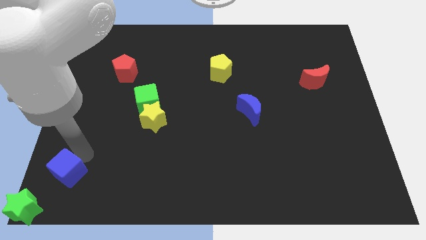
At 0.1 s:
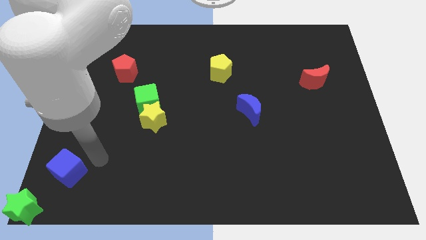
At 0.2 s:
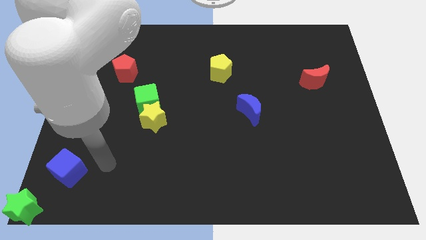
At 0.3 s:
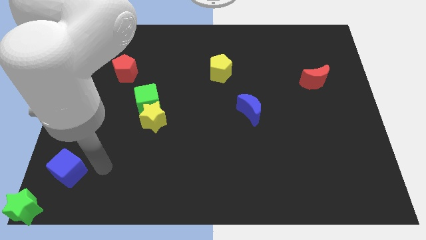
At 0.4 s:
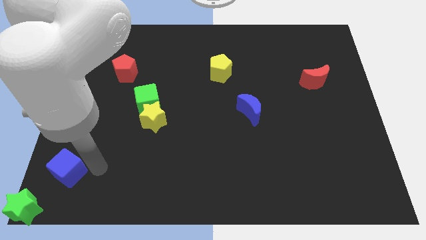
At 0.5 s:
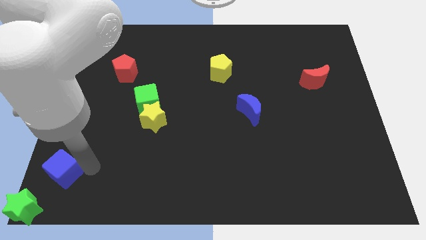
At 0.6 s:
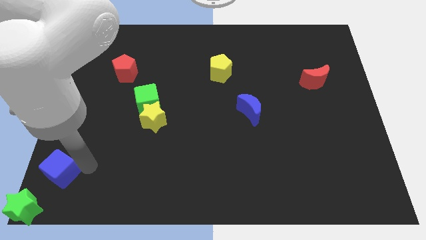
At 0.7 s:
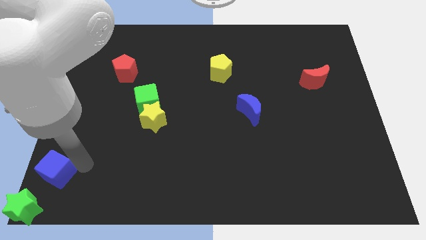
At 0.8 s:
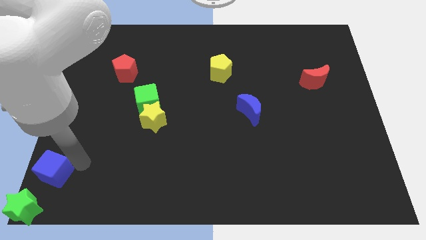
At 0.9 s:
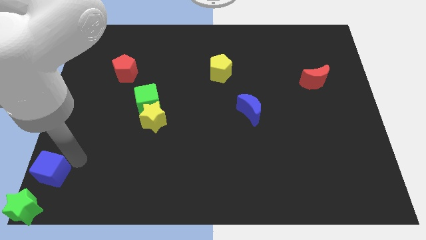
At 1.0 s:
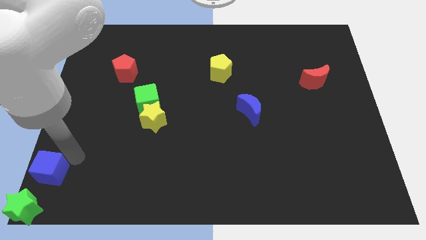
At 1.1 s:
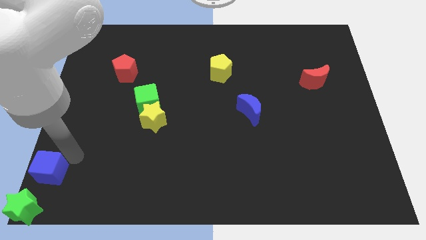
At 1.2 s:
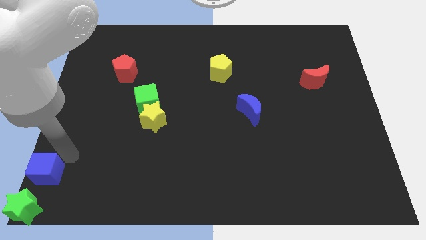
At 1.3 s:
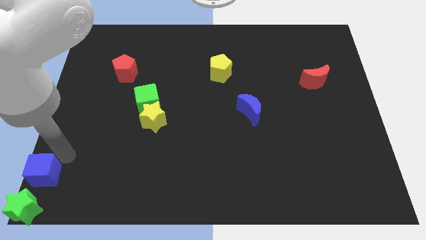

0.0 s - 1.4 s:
place blue cube to the top of green star

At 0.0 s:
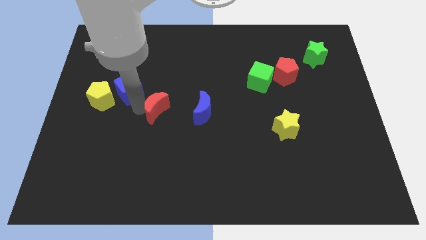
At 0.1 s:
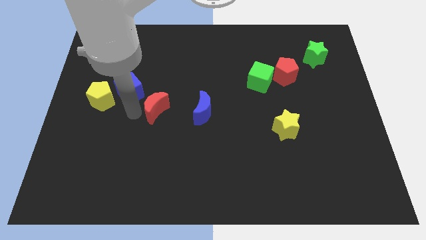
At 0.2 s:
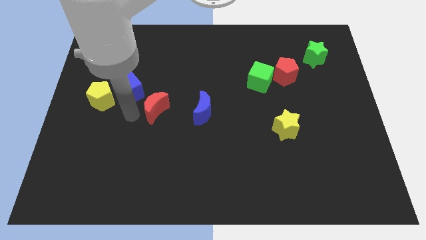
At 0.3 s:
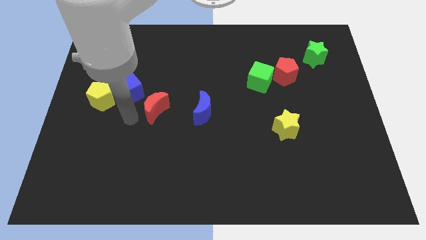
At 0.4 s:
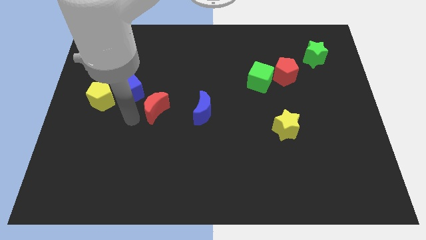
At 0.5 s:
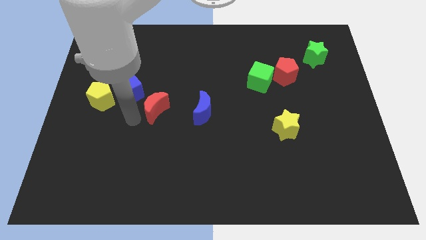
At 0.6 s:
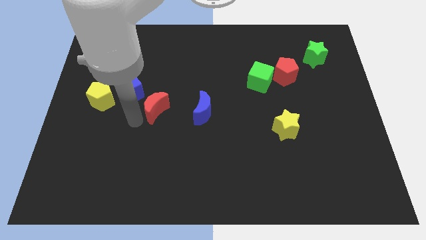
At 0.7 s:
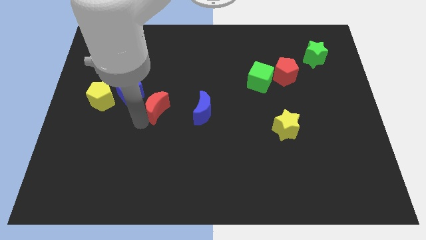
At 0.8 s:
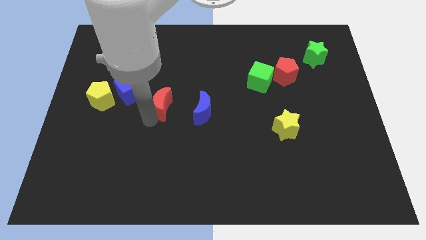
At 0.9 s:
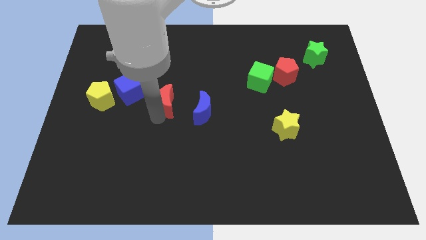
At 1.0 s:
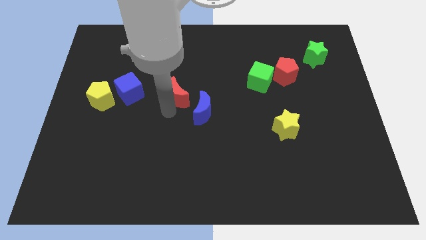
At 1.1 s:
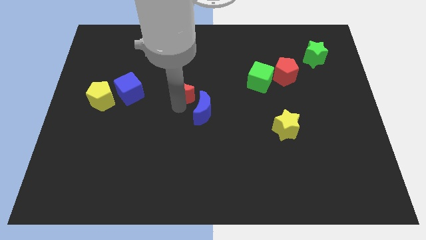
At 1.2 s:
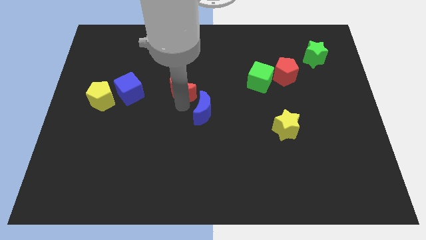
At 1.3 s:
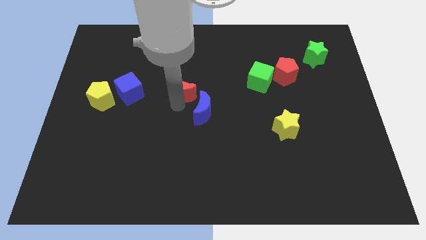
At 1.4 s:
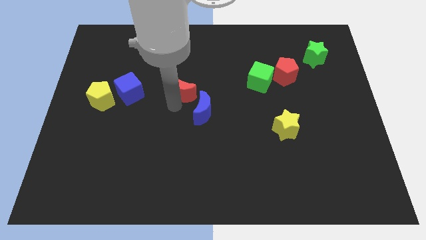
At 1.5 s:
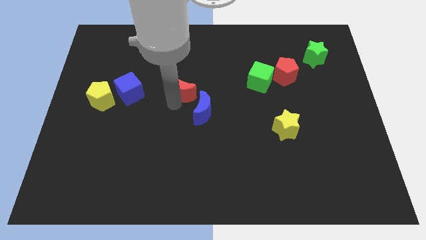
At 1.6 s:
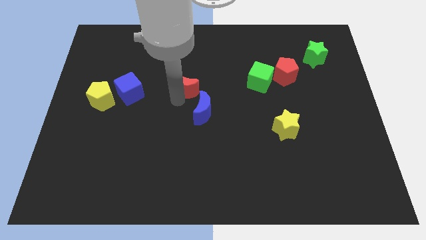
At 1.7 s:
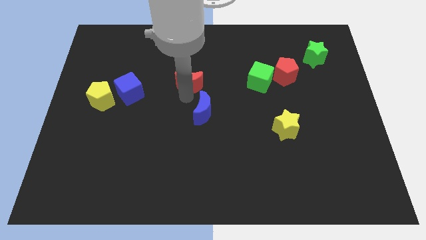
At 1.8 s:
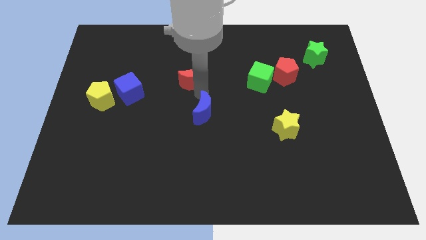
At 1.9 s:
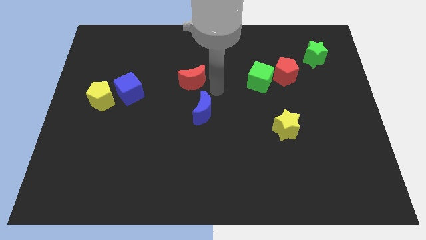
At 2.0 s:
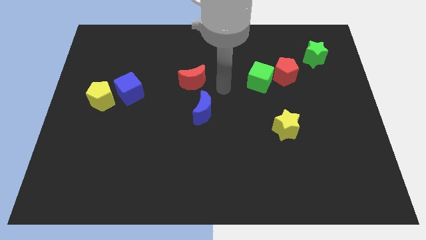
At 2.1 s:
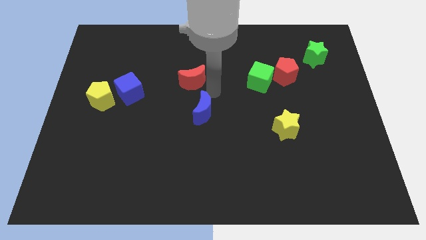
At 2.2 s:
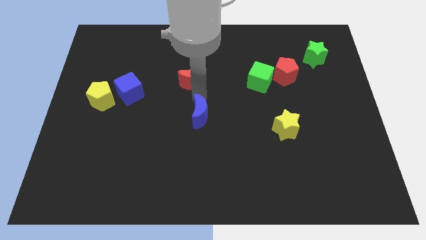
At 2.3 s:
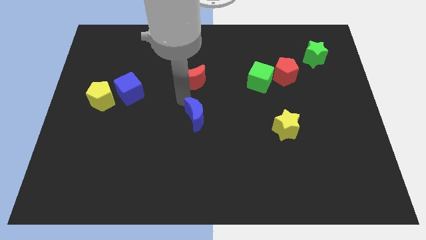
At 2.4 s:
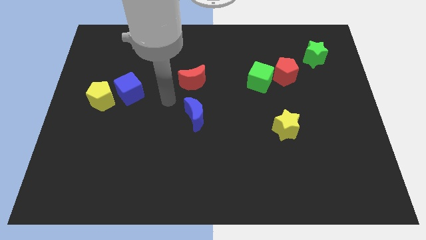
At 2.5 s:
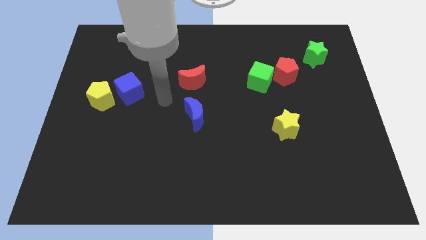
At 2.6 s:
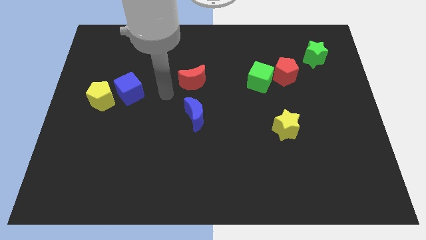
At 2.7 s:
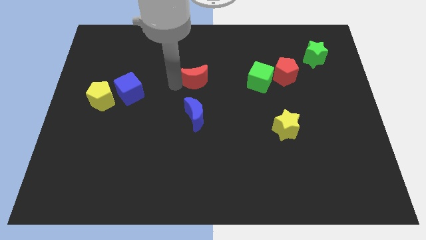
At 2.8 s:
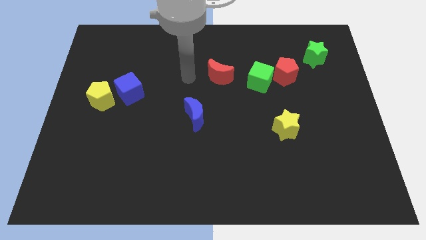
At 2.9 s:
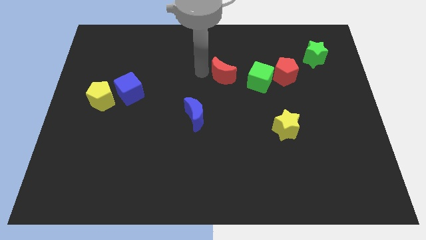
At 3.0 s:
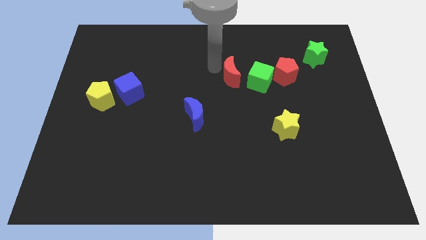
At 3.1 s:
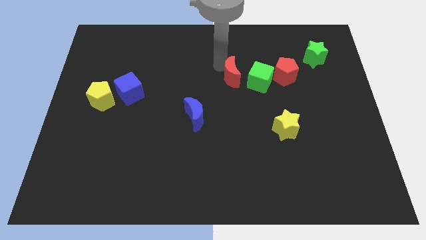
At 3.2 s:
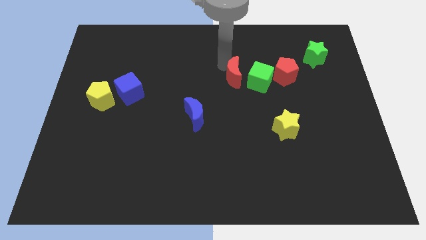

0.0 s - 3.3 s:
push the red moon towards the green cube

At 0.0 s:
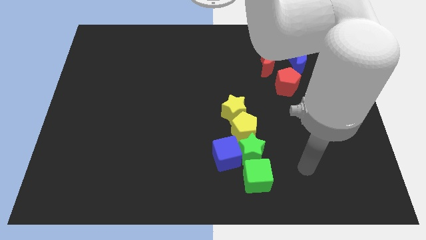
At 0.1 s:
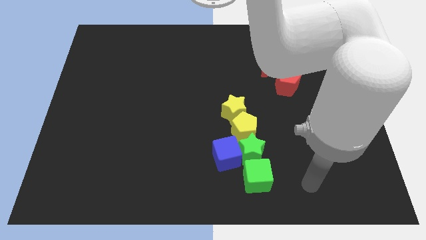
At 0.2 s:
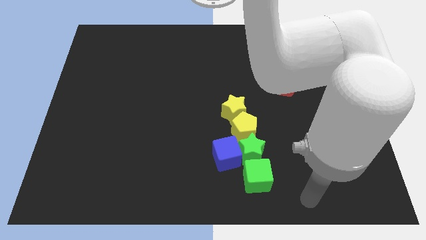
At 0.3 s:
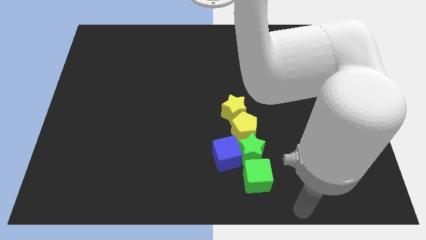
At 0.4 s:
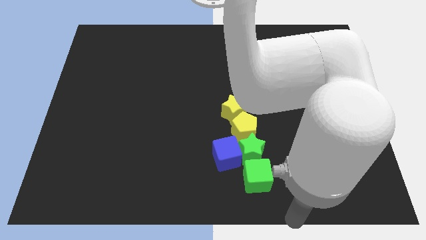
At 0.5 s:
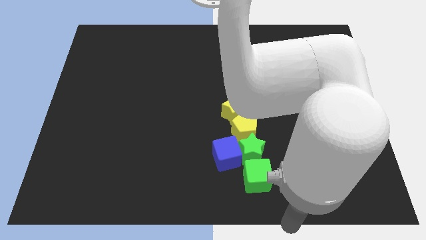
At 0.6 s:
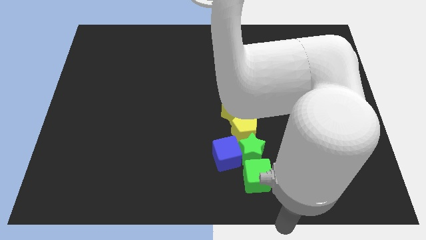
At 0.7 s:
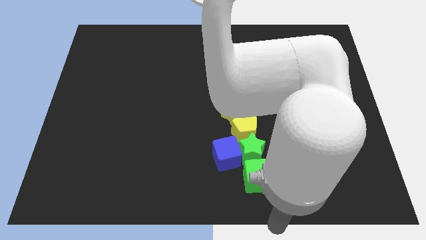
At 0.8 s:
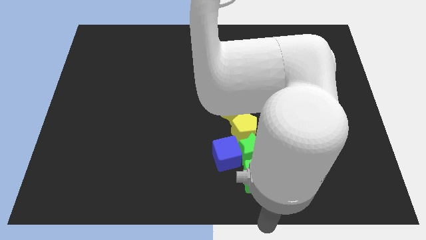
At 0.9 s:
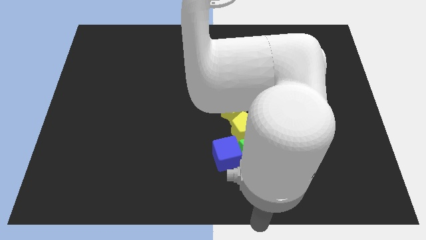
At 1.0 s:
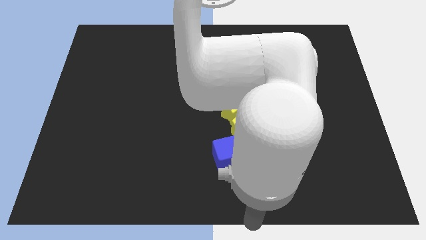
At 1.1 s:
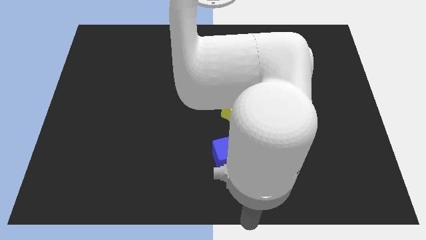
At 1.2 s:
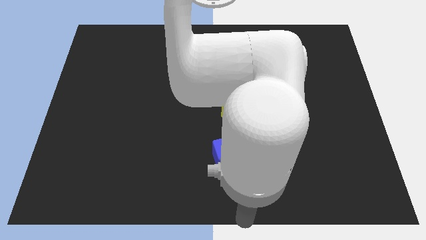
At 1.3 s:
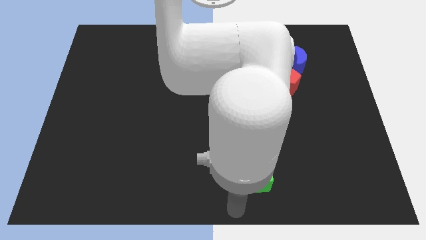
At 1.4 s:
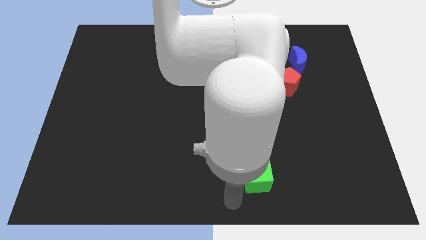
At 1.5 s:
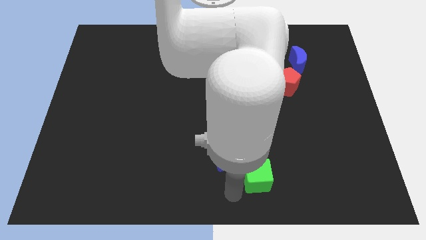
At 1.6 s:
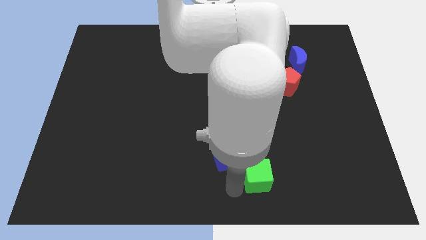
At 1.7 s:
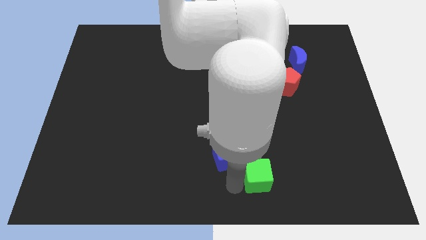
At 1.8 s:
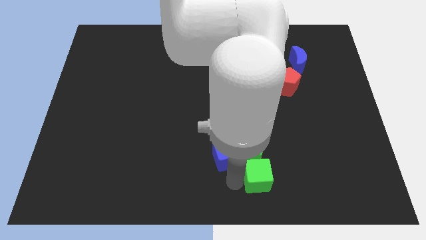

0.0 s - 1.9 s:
move your arm to the left of the green cube

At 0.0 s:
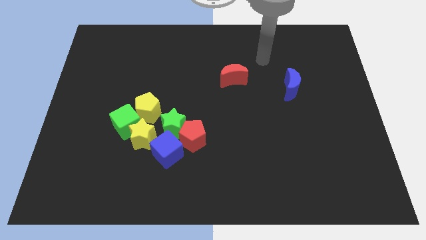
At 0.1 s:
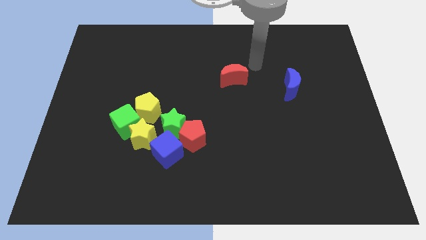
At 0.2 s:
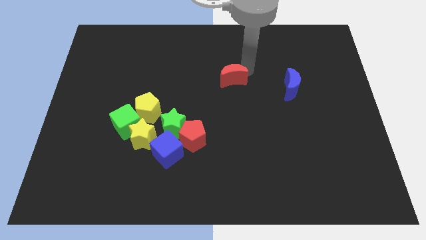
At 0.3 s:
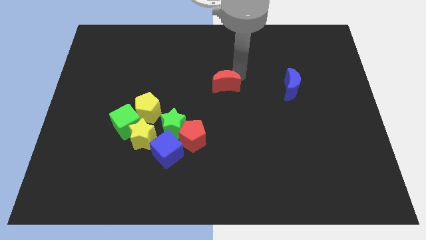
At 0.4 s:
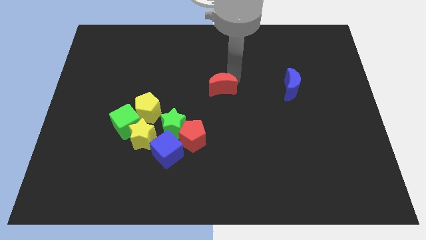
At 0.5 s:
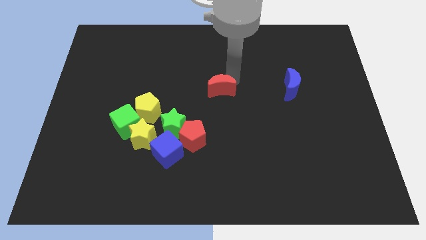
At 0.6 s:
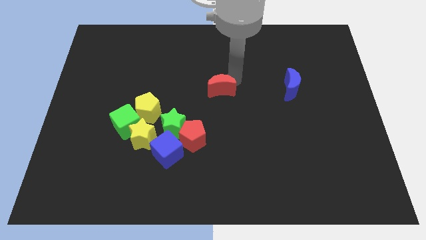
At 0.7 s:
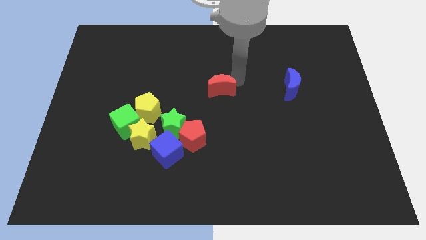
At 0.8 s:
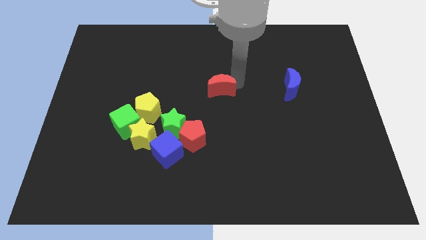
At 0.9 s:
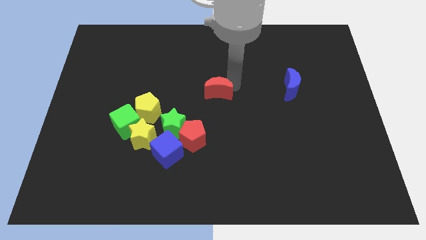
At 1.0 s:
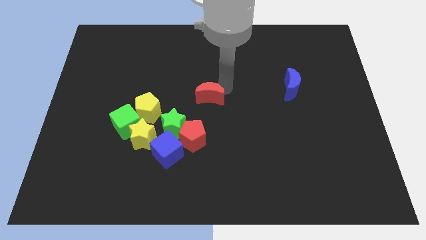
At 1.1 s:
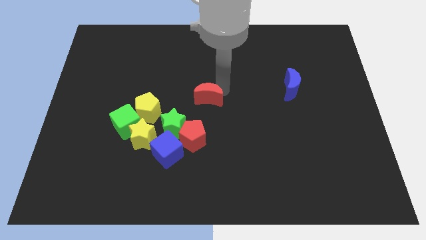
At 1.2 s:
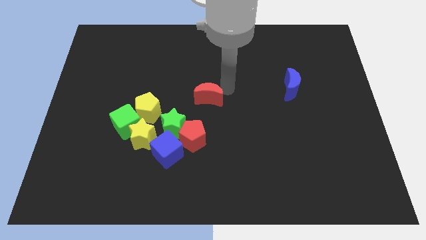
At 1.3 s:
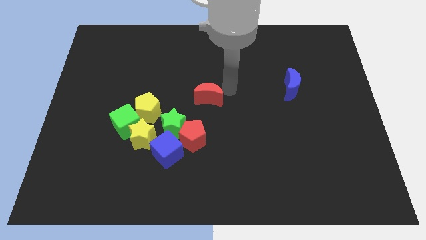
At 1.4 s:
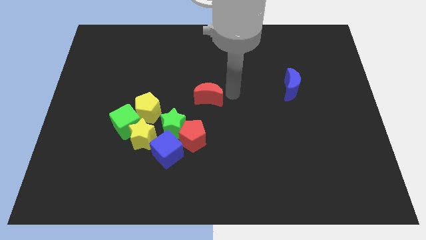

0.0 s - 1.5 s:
place the red moon diagonally top right to green star

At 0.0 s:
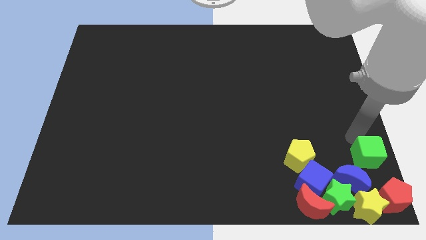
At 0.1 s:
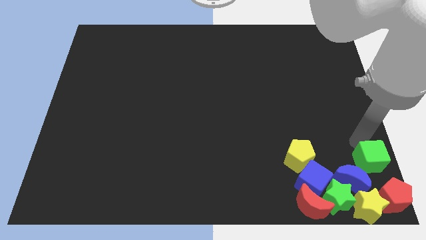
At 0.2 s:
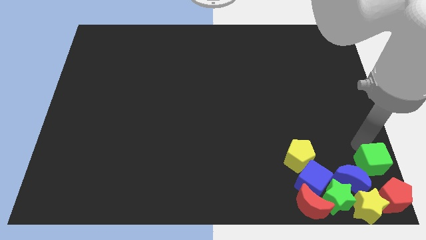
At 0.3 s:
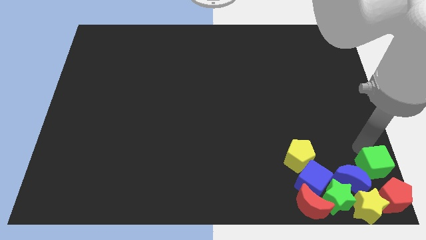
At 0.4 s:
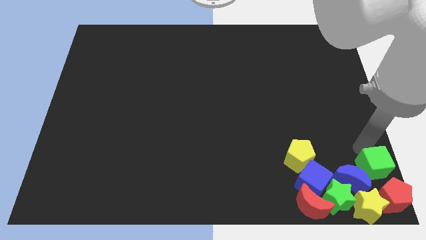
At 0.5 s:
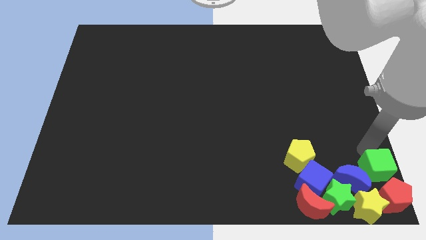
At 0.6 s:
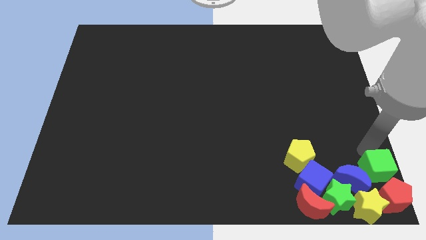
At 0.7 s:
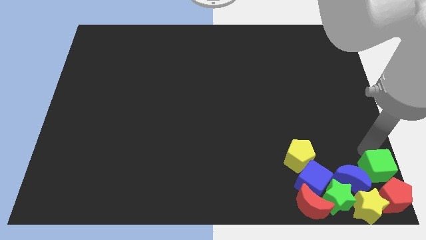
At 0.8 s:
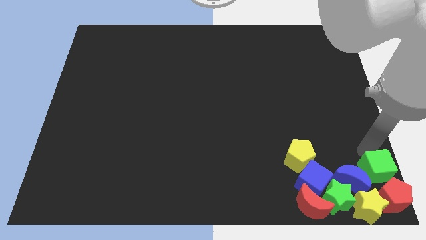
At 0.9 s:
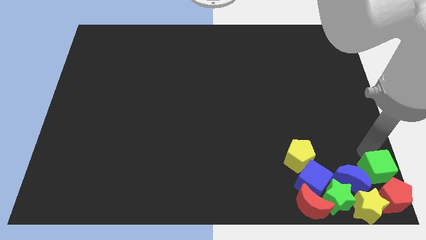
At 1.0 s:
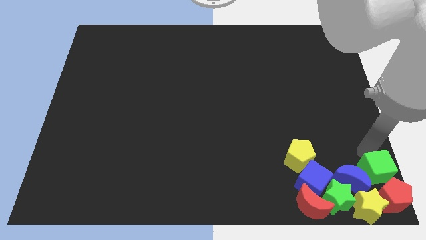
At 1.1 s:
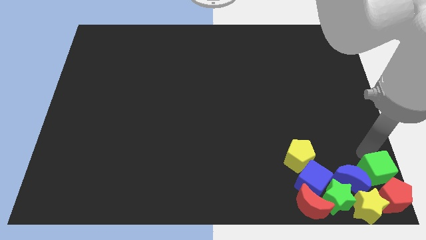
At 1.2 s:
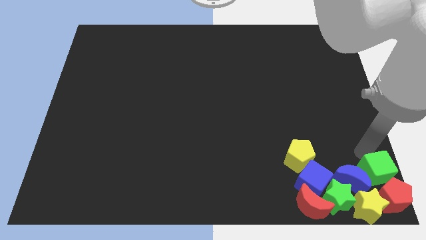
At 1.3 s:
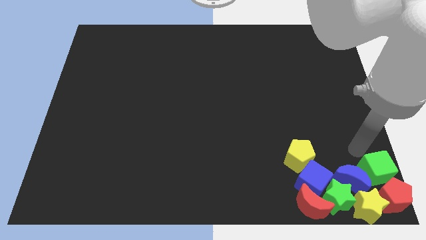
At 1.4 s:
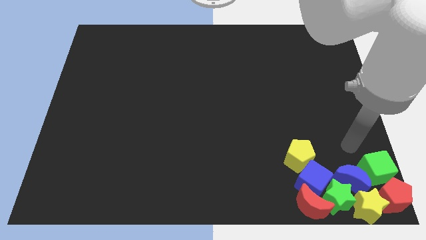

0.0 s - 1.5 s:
push the green cube into the red pentagon
